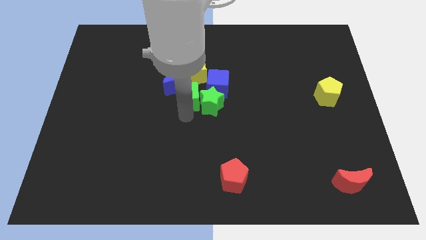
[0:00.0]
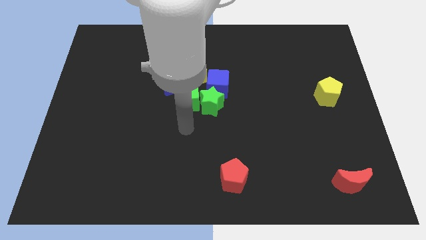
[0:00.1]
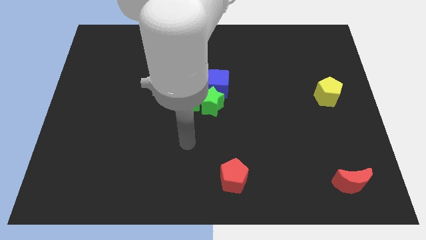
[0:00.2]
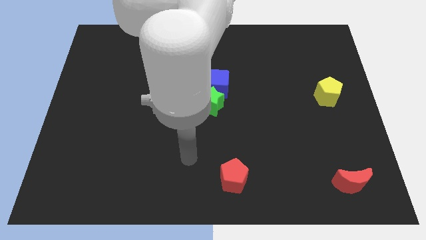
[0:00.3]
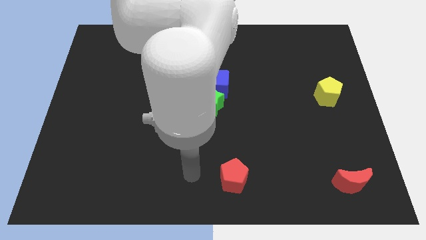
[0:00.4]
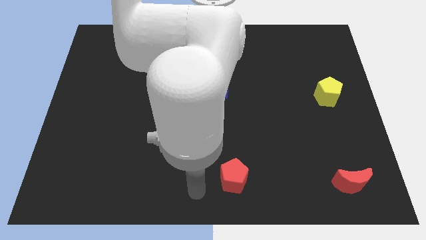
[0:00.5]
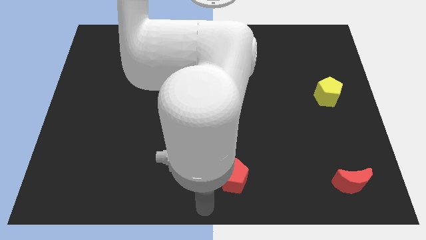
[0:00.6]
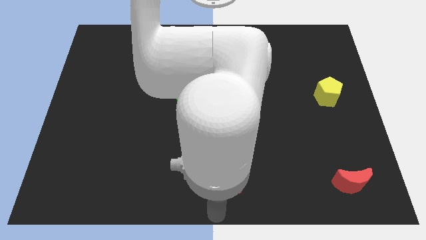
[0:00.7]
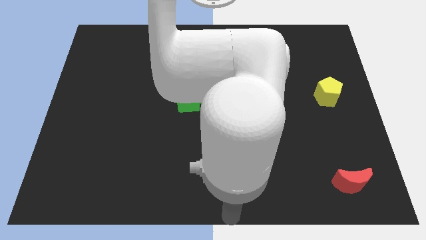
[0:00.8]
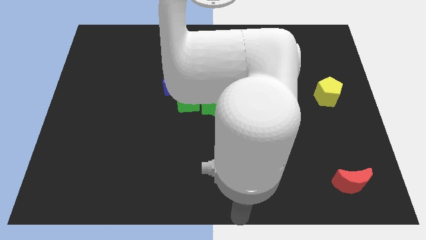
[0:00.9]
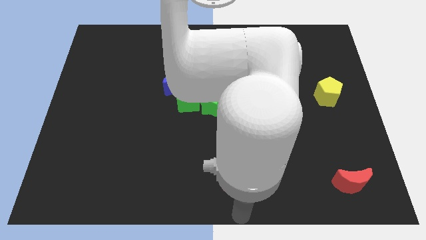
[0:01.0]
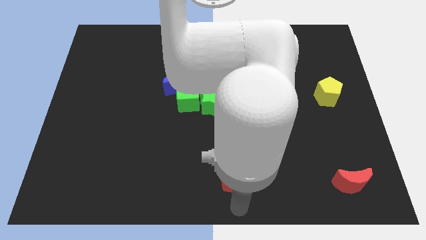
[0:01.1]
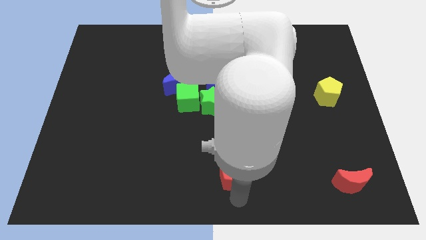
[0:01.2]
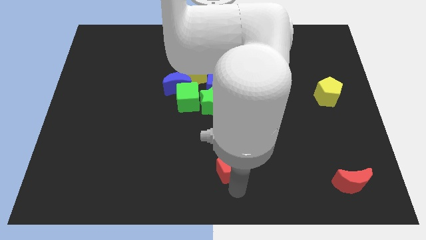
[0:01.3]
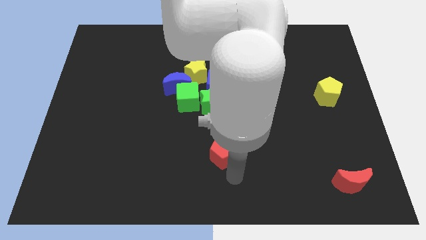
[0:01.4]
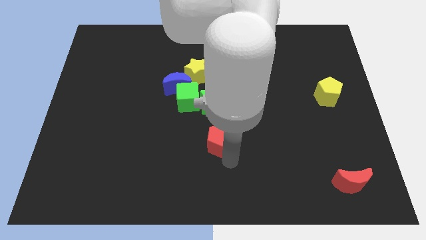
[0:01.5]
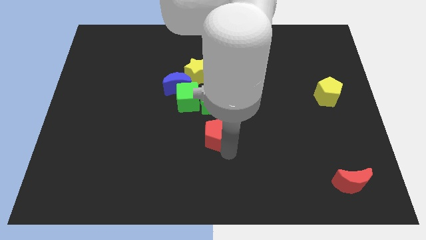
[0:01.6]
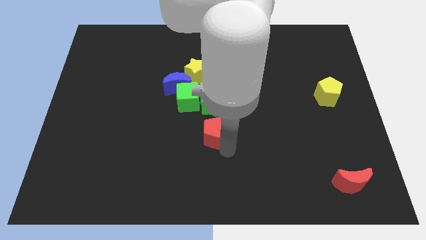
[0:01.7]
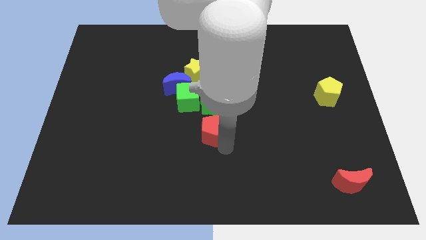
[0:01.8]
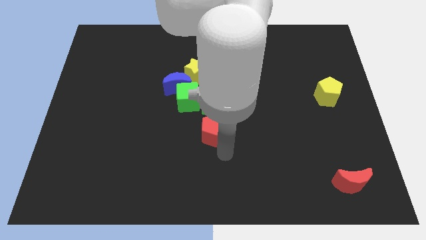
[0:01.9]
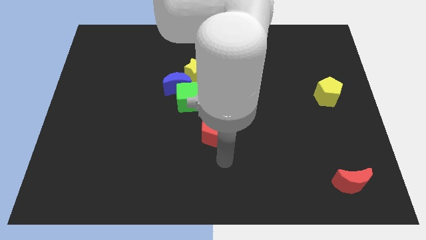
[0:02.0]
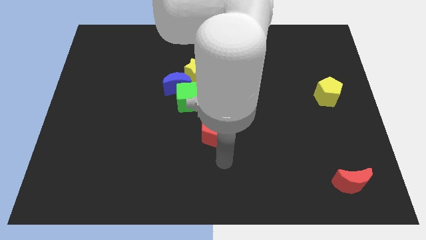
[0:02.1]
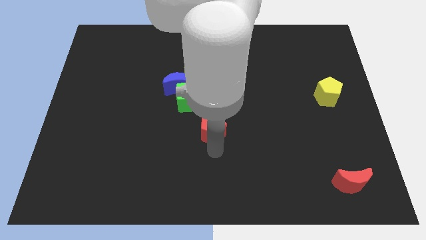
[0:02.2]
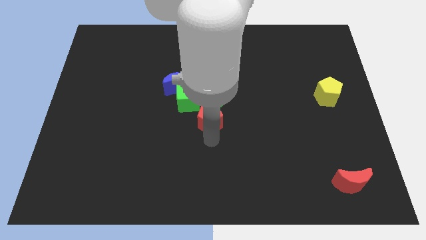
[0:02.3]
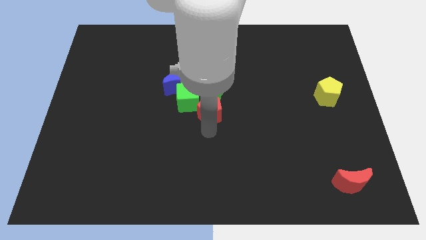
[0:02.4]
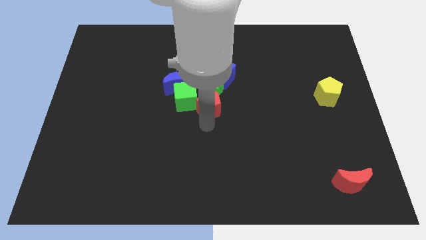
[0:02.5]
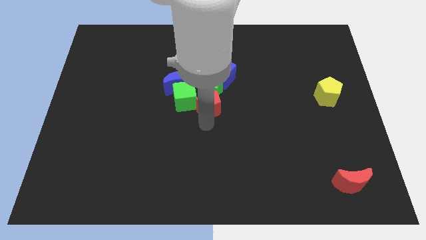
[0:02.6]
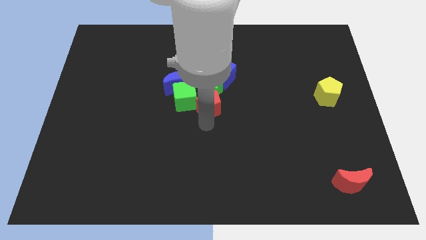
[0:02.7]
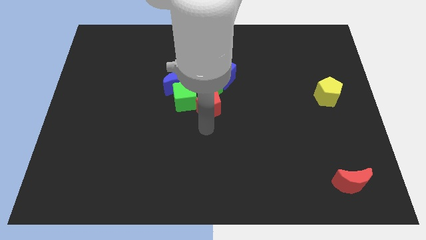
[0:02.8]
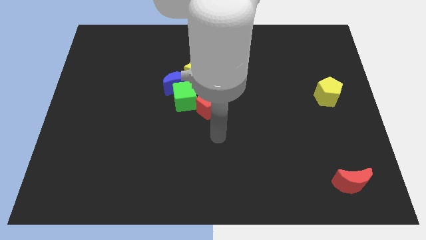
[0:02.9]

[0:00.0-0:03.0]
slide the red pentagon into the group of blocks

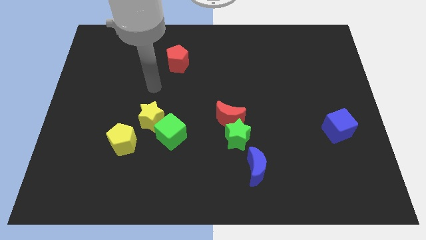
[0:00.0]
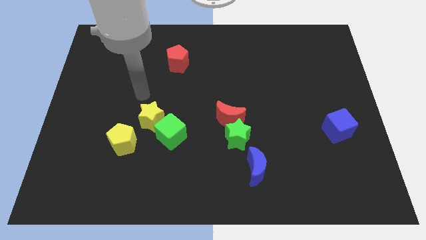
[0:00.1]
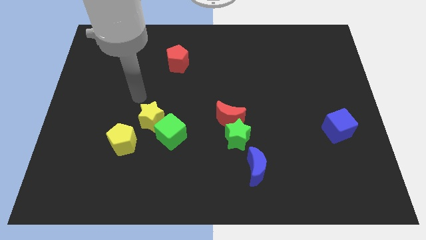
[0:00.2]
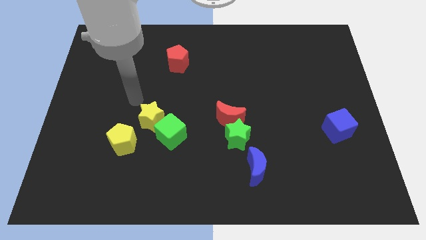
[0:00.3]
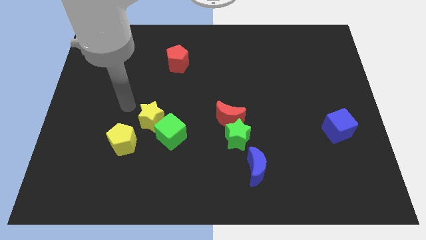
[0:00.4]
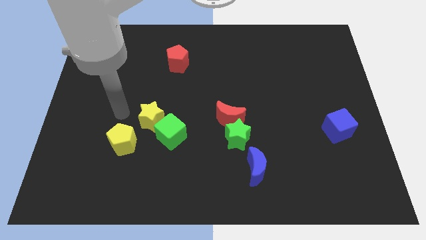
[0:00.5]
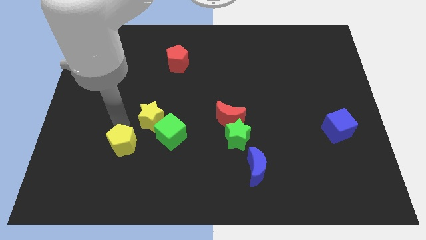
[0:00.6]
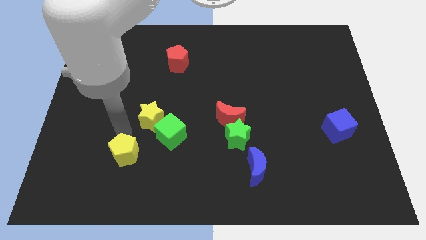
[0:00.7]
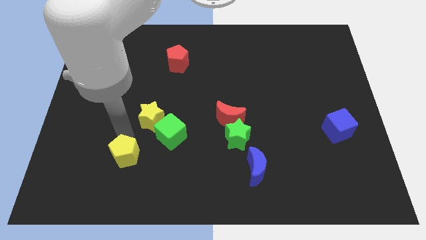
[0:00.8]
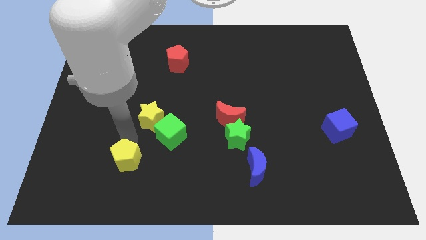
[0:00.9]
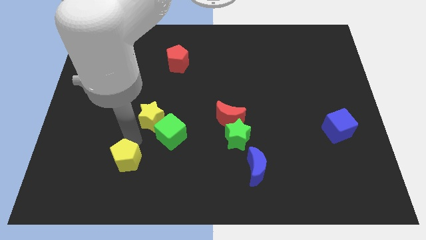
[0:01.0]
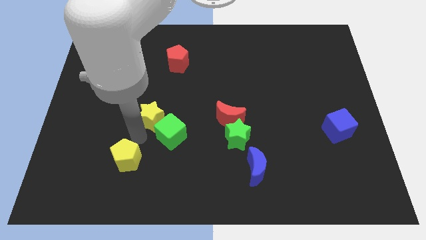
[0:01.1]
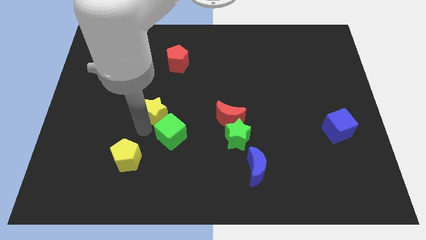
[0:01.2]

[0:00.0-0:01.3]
move the yellow pentagon slightly to the bottom

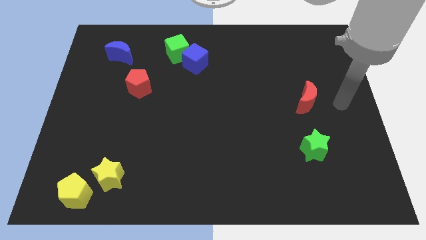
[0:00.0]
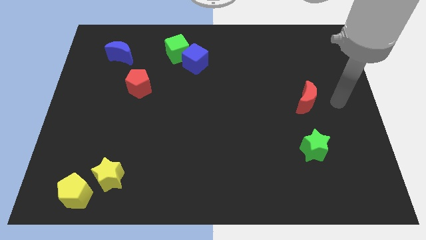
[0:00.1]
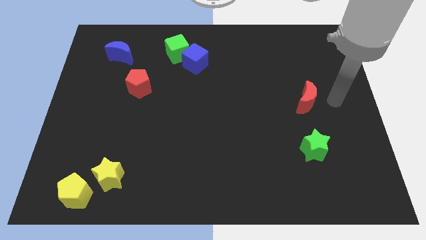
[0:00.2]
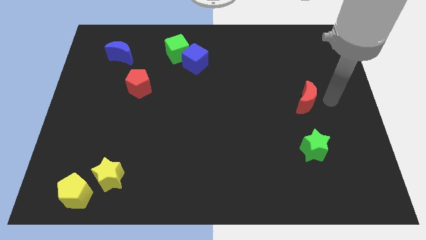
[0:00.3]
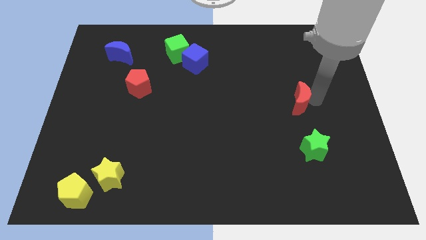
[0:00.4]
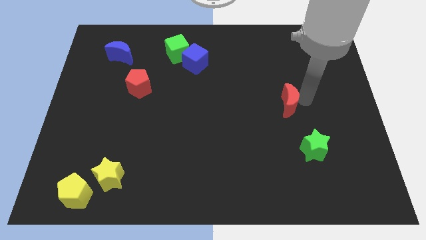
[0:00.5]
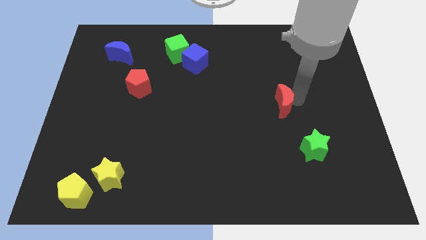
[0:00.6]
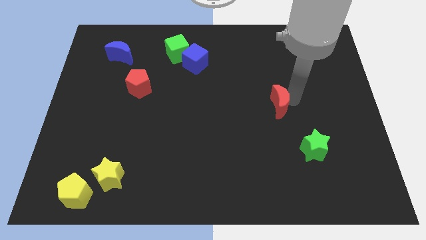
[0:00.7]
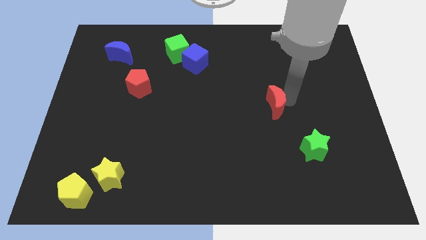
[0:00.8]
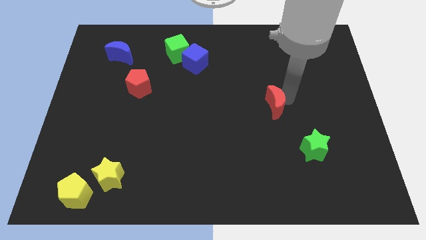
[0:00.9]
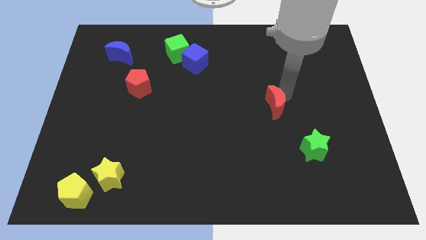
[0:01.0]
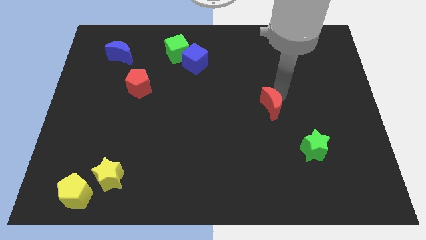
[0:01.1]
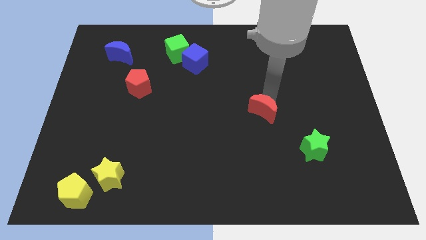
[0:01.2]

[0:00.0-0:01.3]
move the red moon slightly to the left of the board

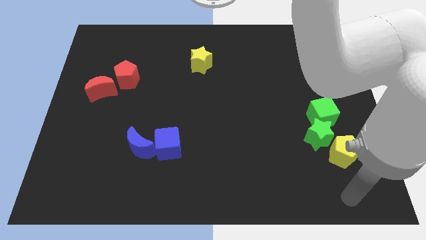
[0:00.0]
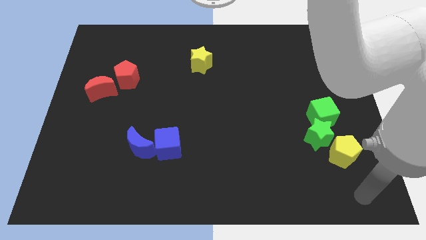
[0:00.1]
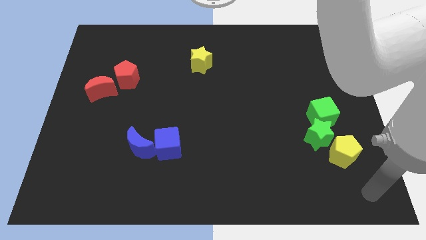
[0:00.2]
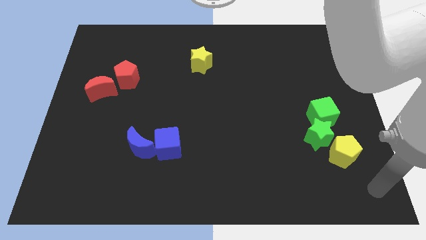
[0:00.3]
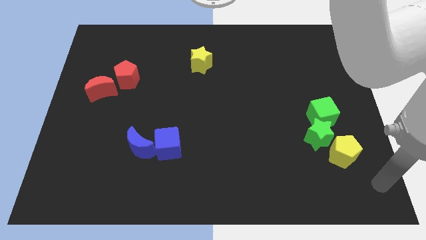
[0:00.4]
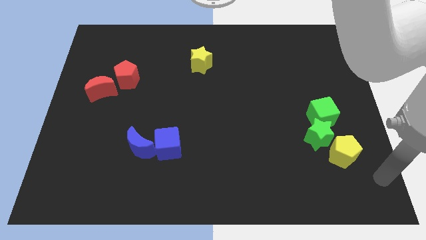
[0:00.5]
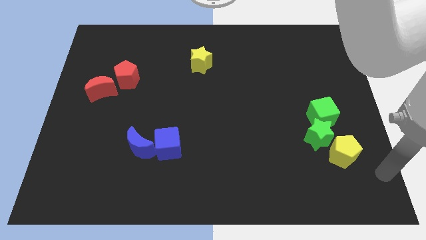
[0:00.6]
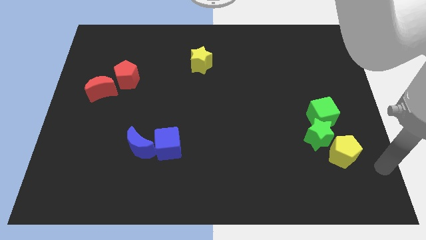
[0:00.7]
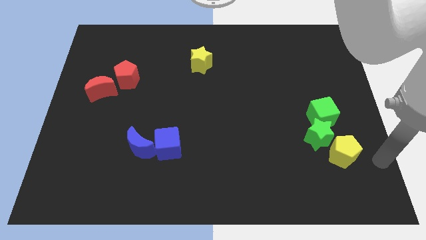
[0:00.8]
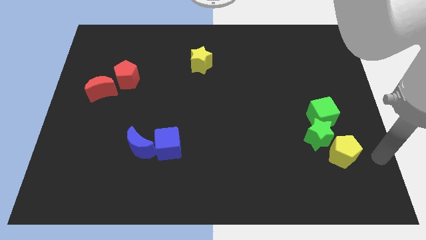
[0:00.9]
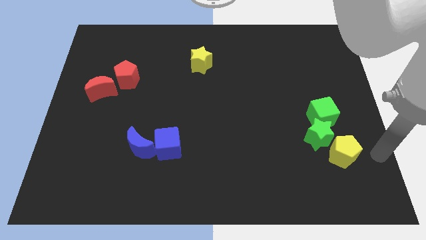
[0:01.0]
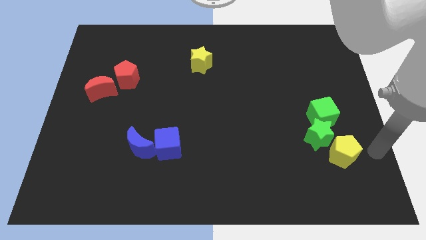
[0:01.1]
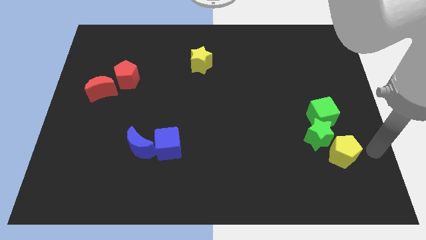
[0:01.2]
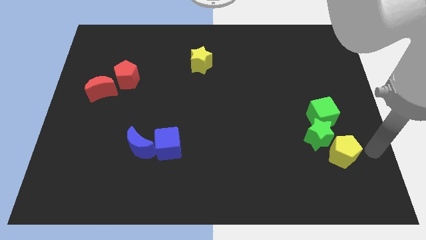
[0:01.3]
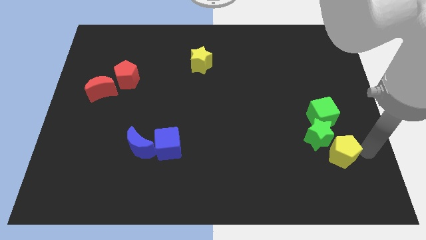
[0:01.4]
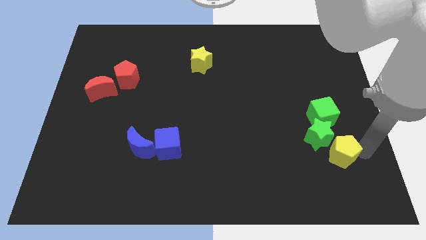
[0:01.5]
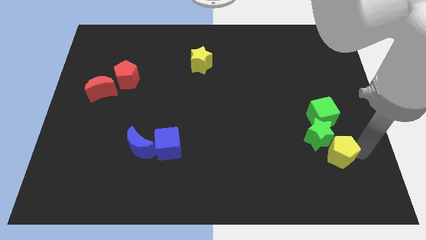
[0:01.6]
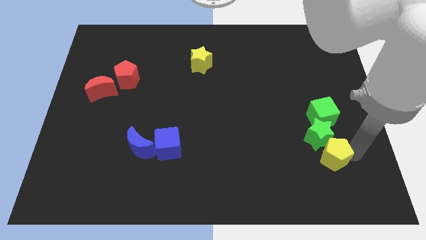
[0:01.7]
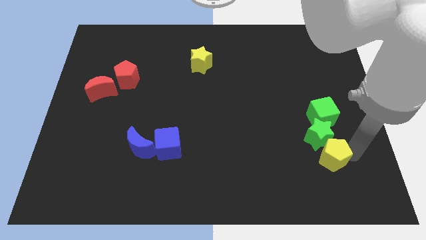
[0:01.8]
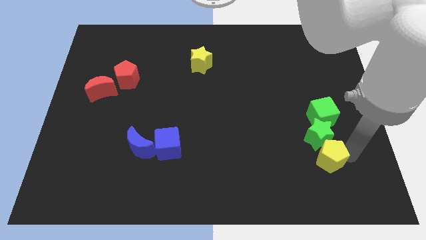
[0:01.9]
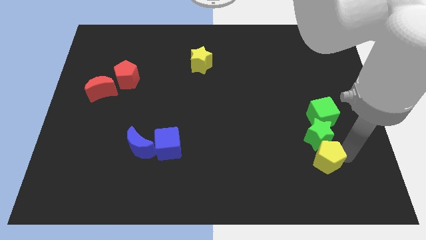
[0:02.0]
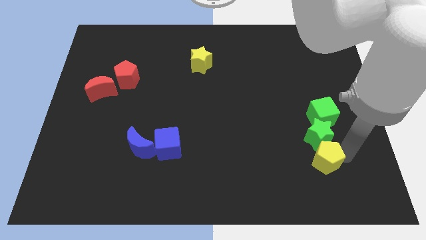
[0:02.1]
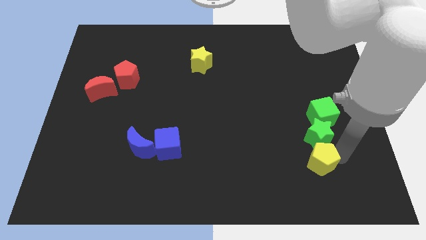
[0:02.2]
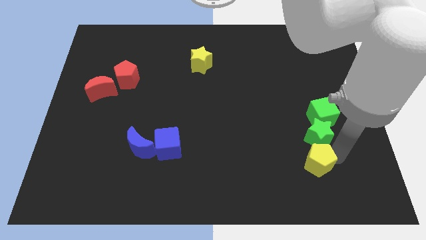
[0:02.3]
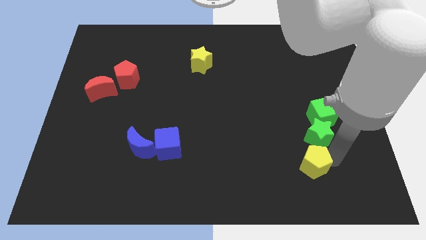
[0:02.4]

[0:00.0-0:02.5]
place the yellow pentagon below the green star

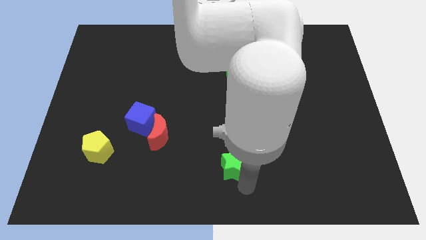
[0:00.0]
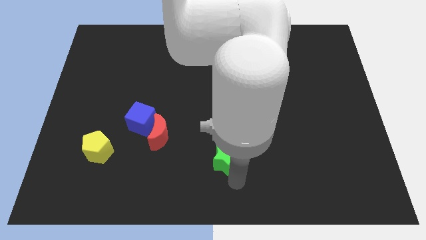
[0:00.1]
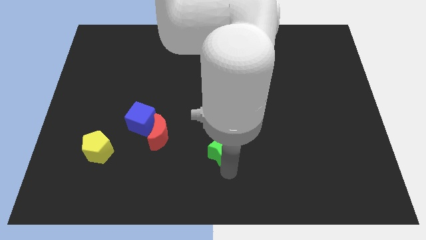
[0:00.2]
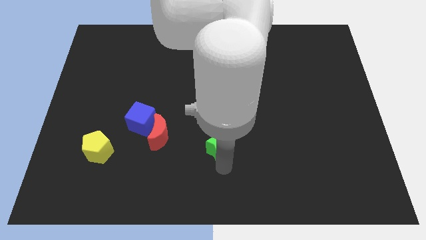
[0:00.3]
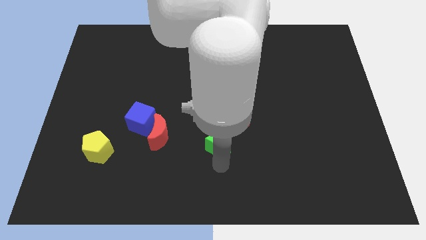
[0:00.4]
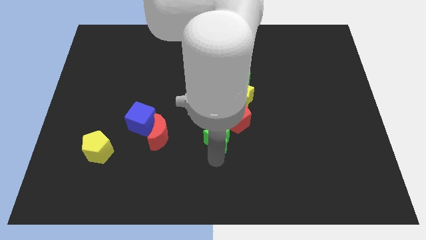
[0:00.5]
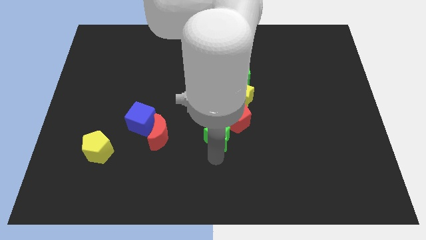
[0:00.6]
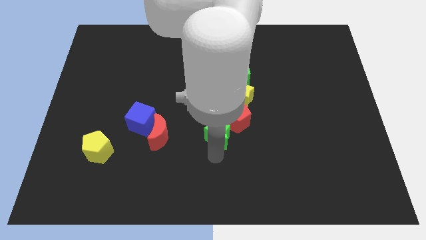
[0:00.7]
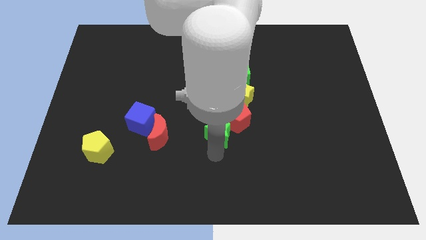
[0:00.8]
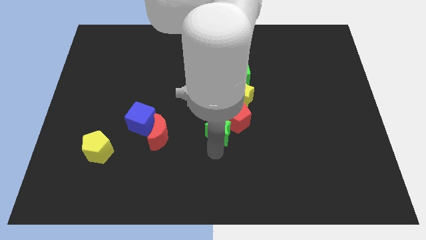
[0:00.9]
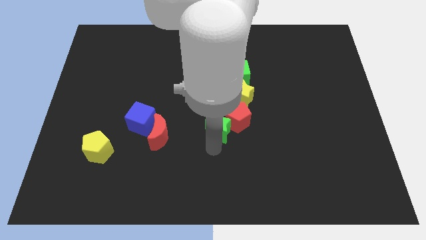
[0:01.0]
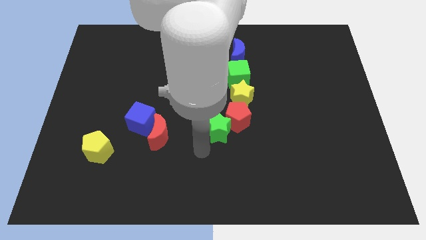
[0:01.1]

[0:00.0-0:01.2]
move green star at bottom left of red pentagon
